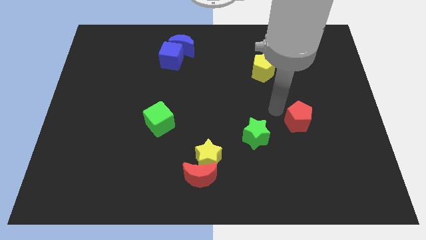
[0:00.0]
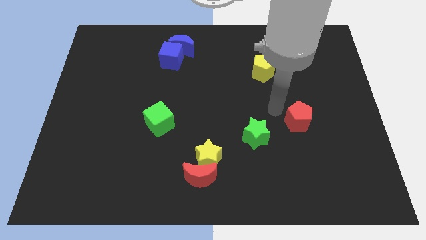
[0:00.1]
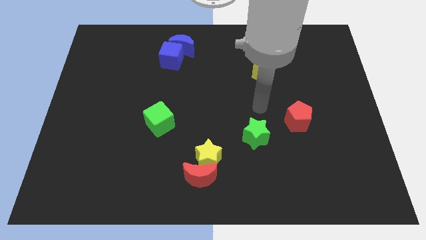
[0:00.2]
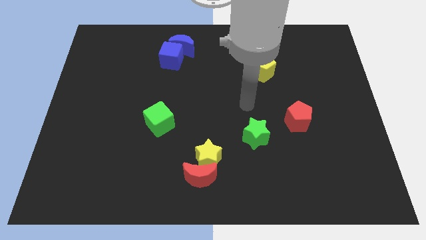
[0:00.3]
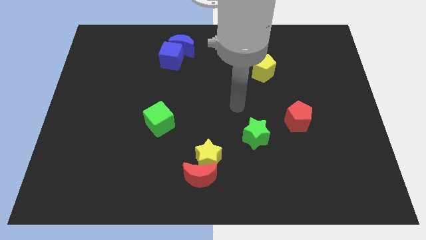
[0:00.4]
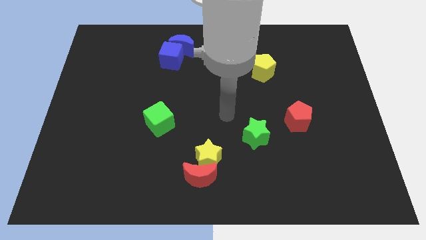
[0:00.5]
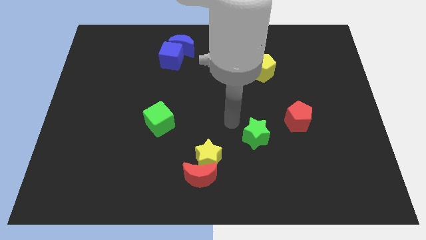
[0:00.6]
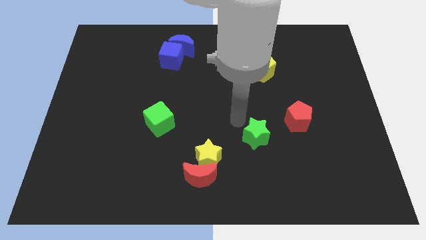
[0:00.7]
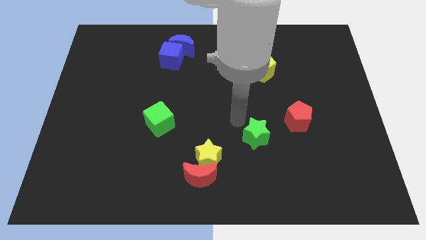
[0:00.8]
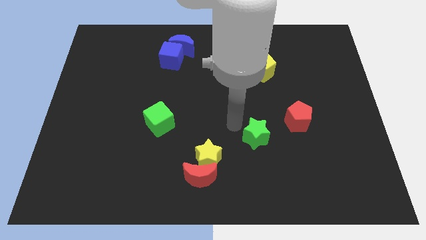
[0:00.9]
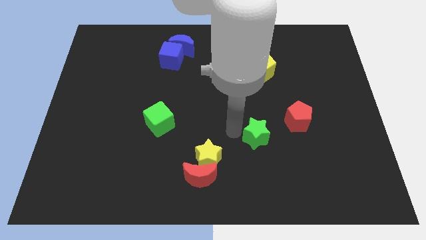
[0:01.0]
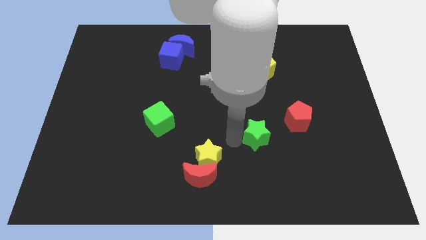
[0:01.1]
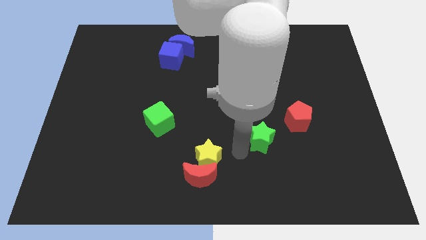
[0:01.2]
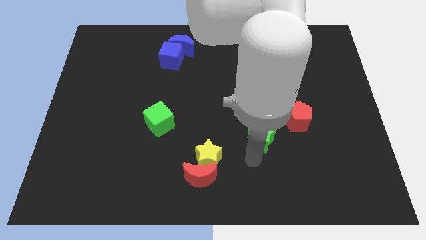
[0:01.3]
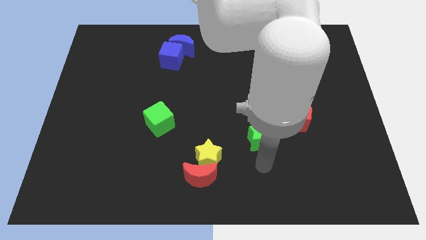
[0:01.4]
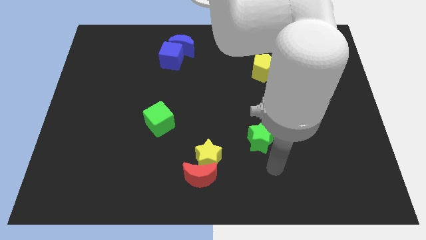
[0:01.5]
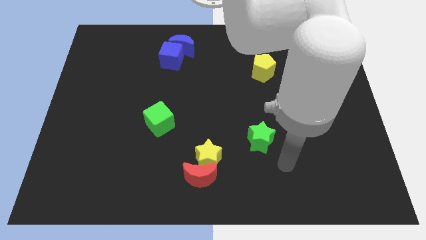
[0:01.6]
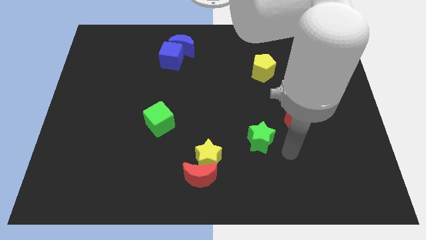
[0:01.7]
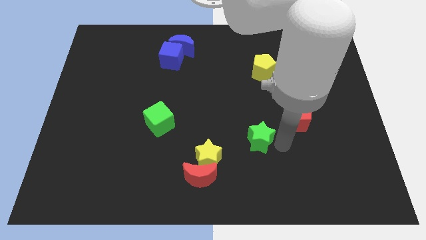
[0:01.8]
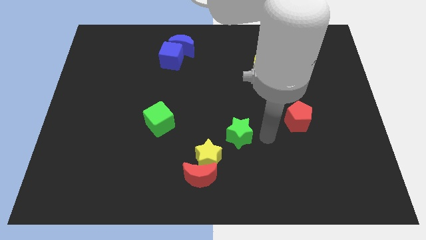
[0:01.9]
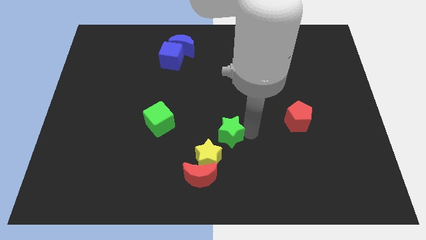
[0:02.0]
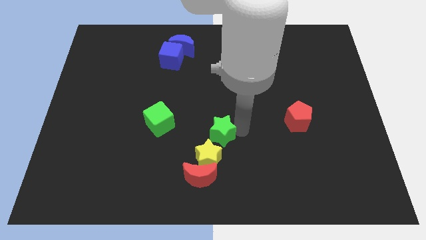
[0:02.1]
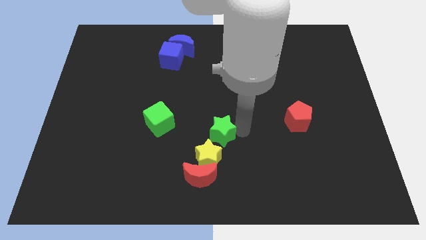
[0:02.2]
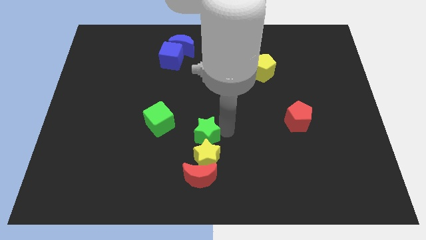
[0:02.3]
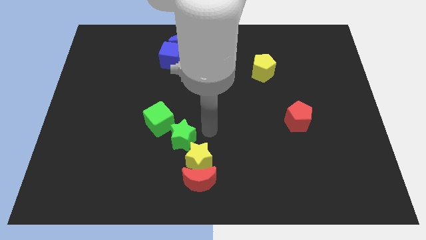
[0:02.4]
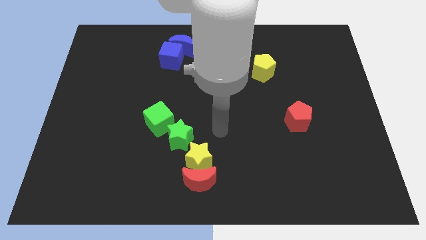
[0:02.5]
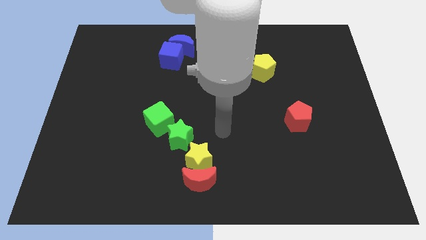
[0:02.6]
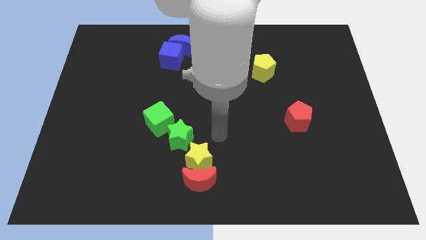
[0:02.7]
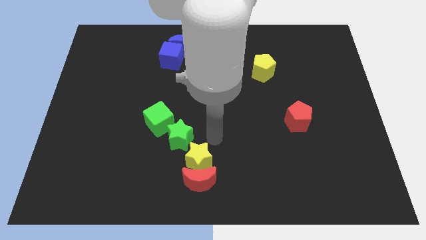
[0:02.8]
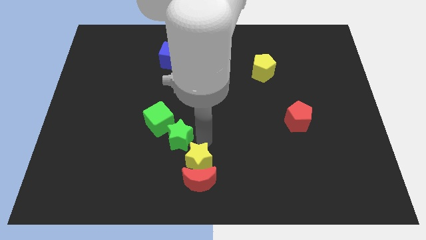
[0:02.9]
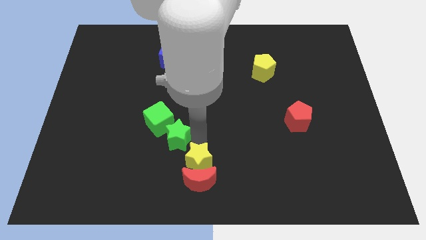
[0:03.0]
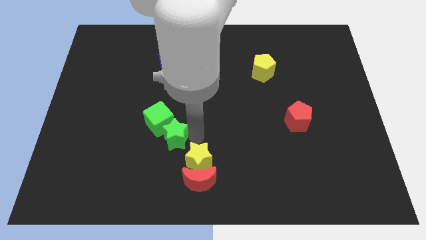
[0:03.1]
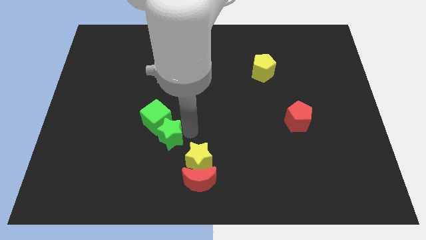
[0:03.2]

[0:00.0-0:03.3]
move the green star into the green cube

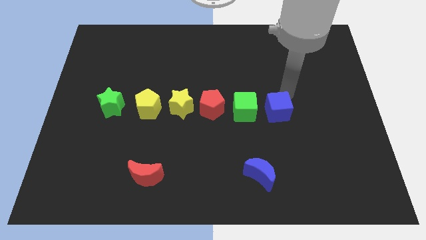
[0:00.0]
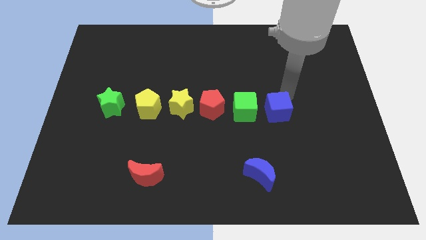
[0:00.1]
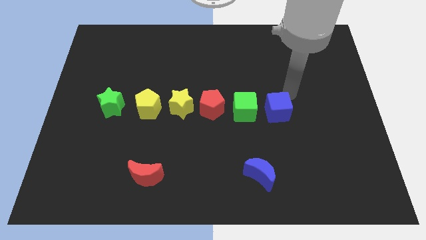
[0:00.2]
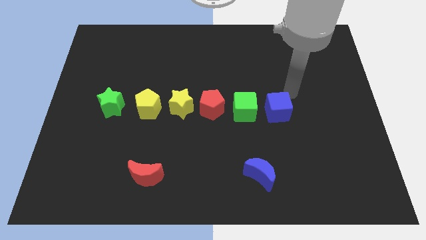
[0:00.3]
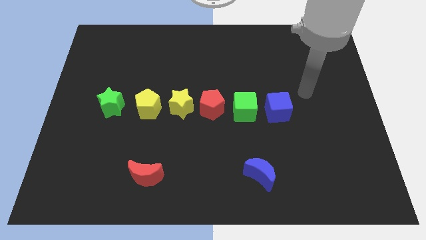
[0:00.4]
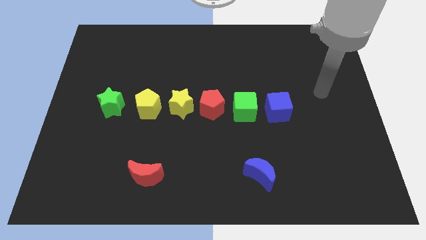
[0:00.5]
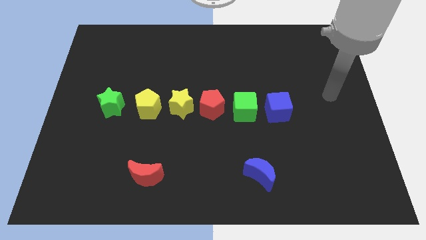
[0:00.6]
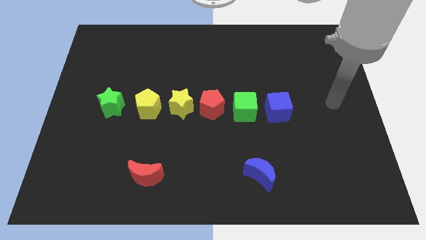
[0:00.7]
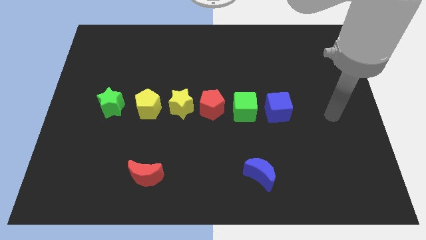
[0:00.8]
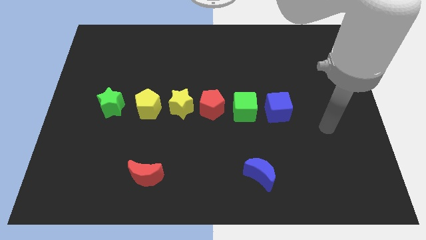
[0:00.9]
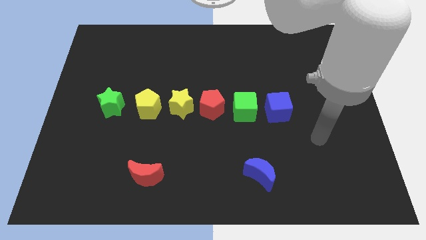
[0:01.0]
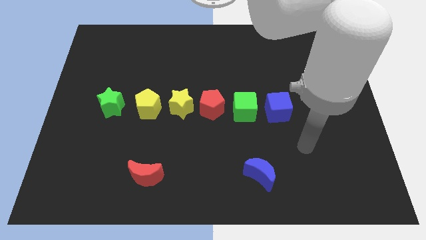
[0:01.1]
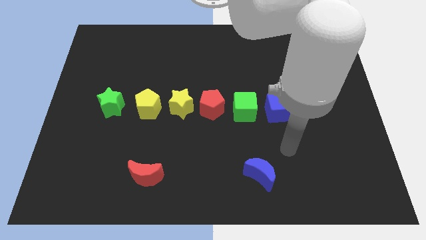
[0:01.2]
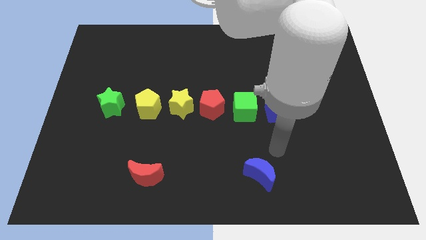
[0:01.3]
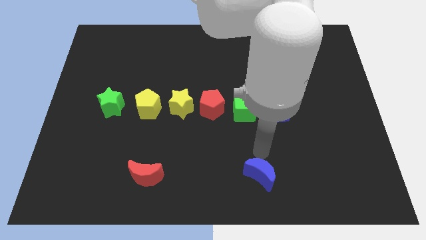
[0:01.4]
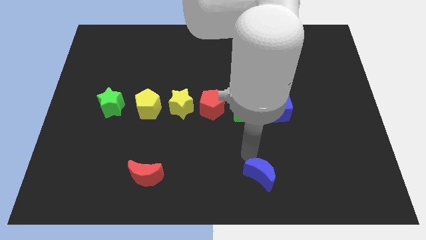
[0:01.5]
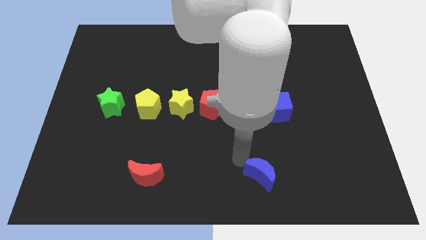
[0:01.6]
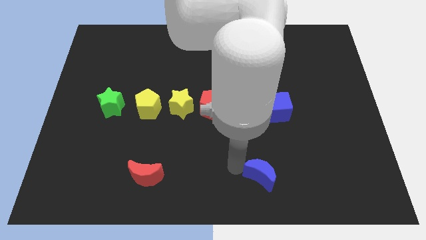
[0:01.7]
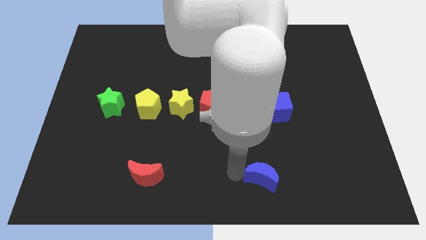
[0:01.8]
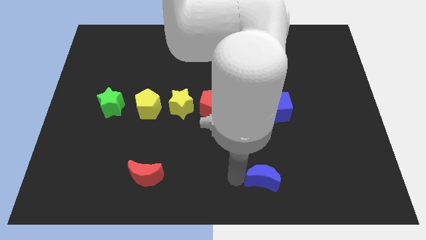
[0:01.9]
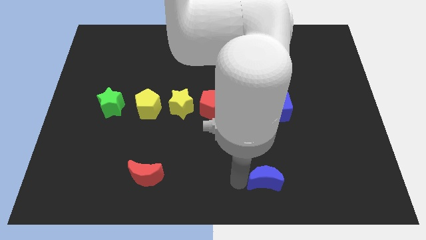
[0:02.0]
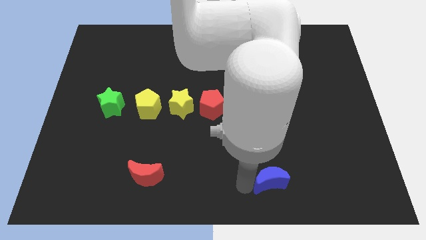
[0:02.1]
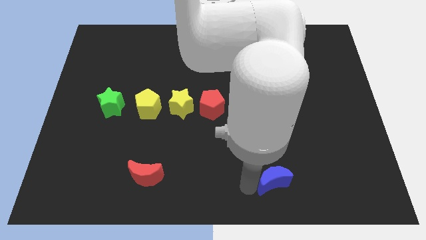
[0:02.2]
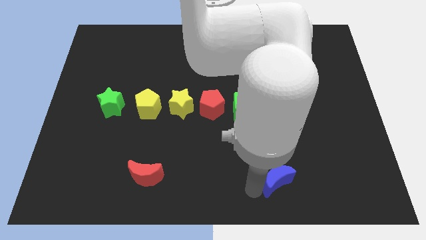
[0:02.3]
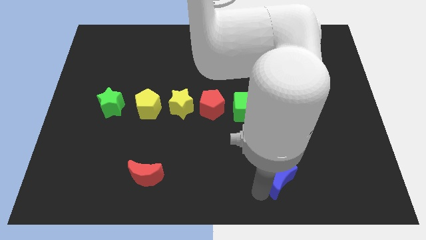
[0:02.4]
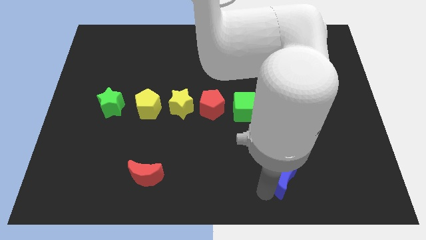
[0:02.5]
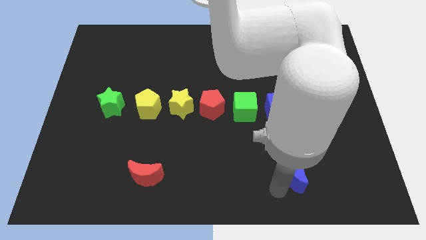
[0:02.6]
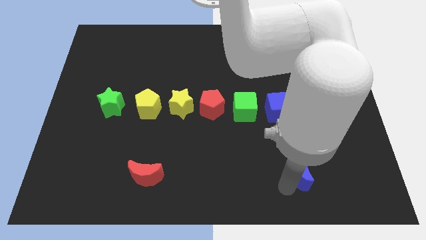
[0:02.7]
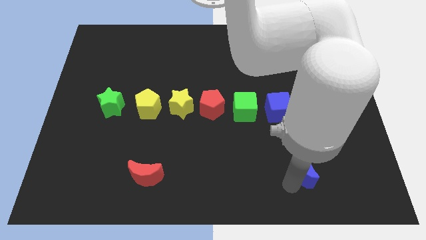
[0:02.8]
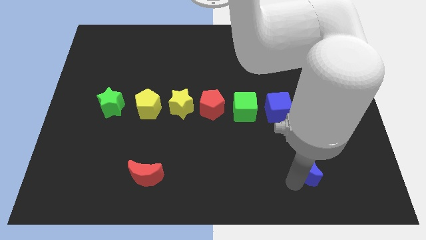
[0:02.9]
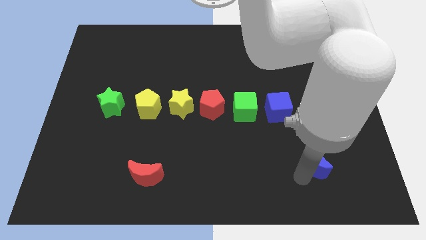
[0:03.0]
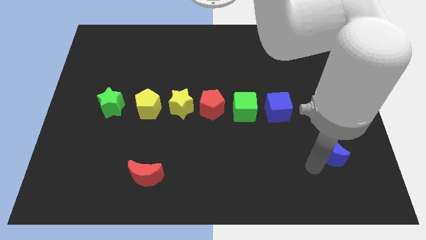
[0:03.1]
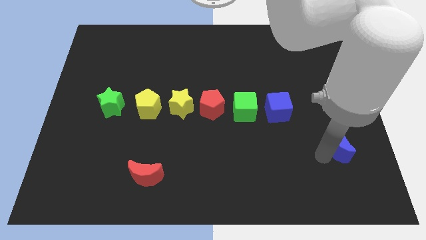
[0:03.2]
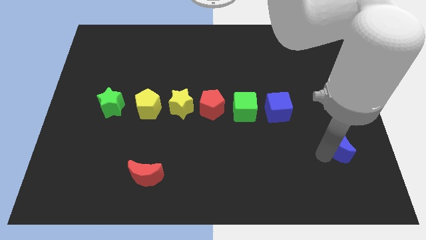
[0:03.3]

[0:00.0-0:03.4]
push the blue crescent towards the top of the board

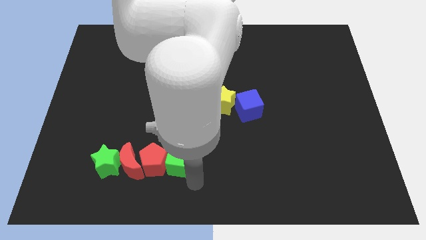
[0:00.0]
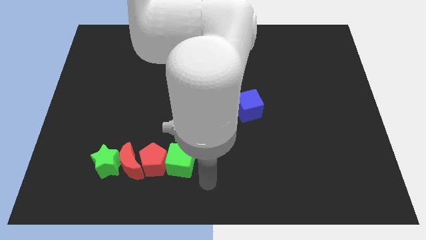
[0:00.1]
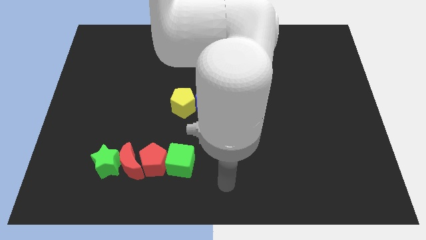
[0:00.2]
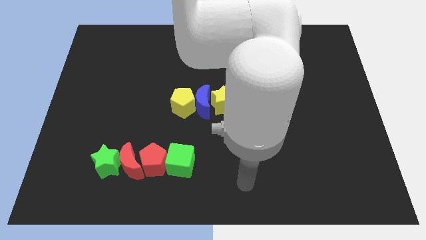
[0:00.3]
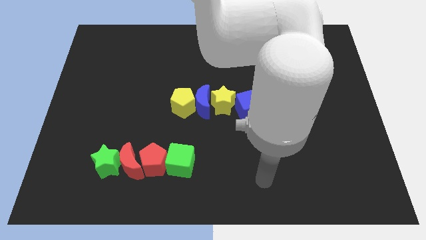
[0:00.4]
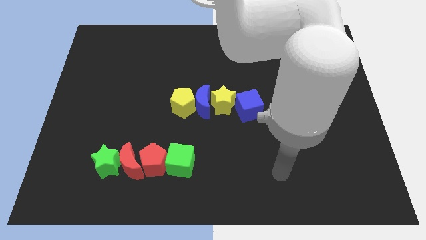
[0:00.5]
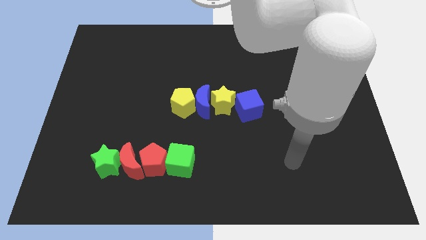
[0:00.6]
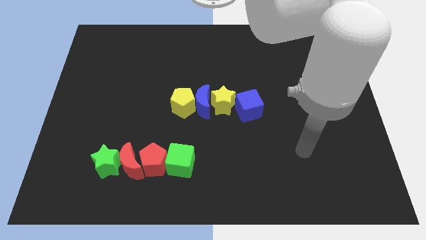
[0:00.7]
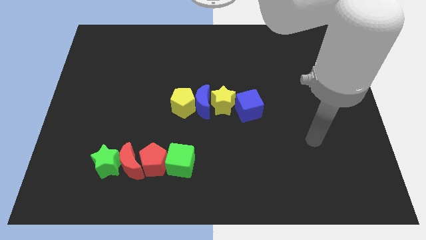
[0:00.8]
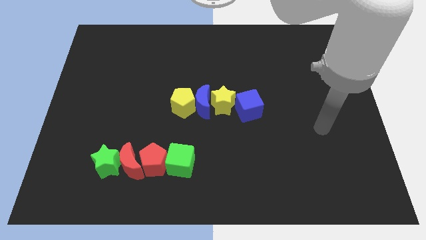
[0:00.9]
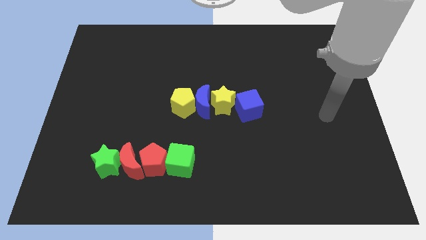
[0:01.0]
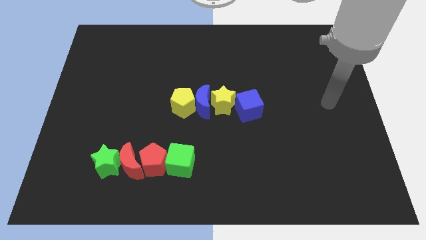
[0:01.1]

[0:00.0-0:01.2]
move your hand to the top right corner

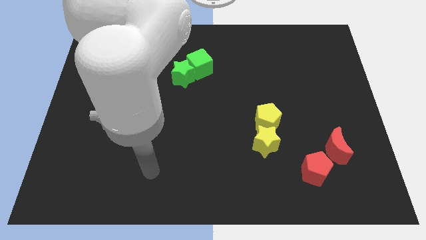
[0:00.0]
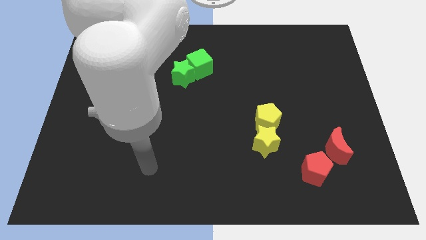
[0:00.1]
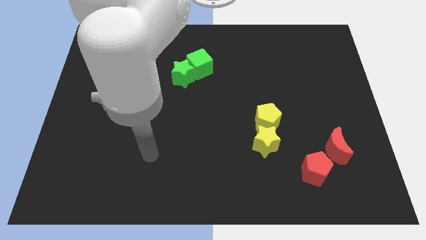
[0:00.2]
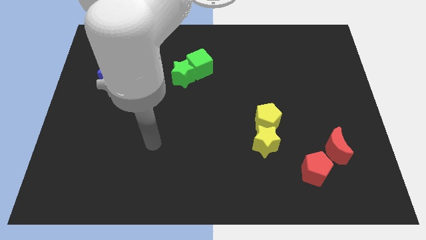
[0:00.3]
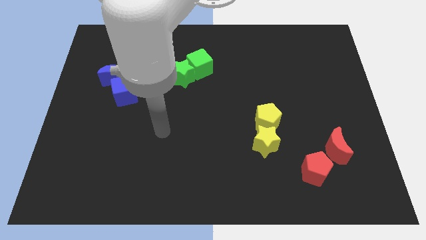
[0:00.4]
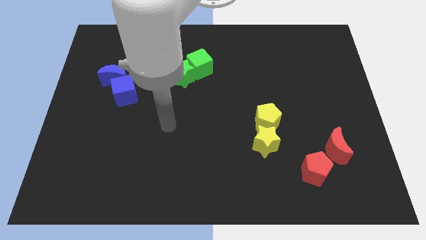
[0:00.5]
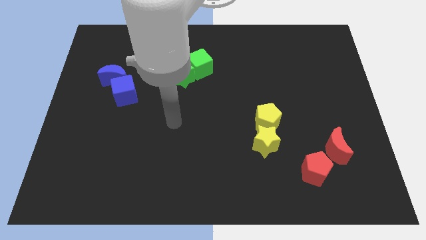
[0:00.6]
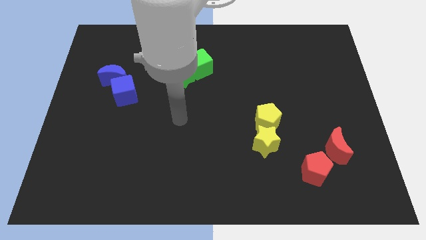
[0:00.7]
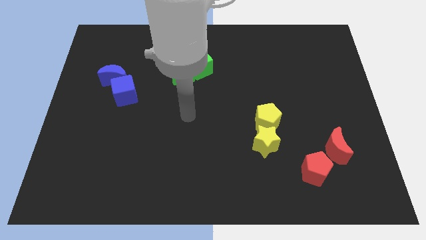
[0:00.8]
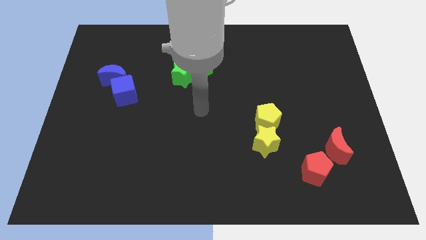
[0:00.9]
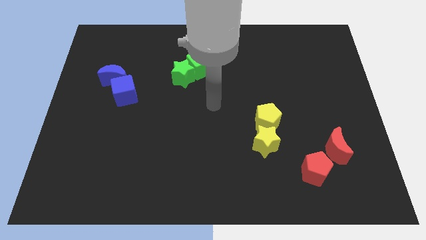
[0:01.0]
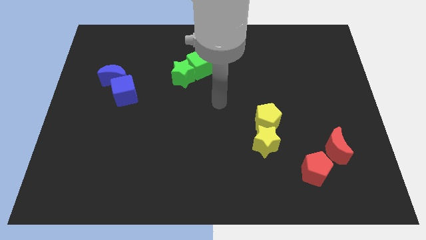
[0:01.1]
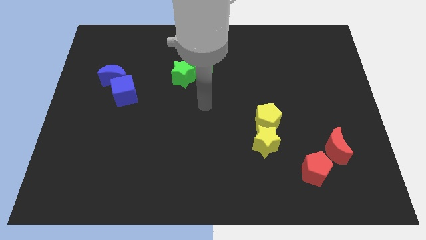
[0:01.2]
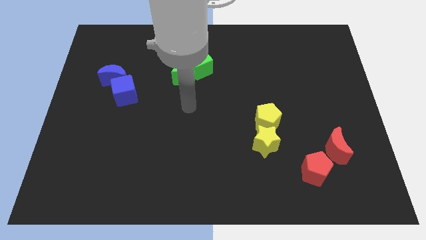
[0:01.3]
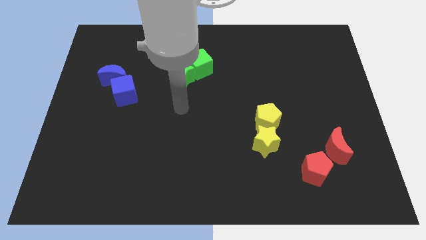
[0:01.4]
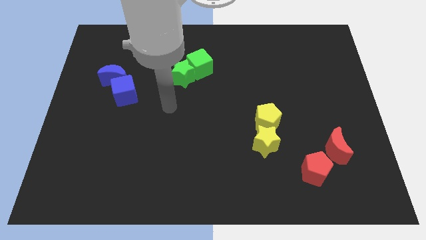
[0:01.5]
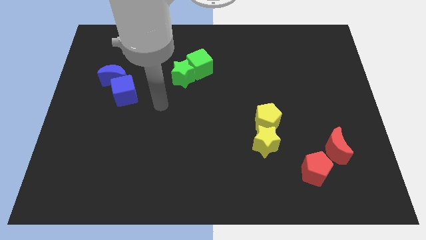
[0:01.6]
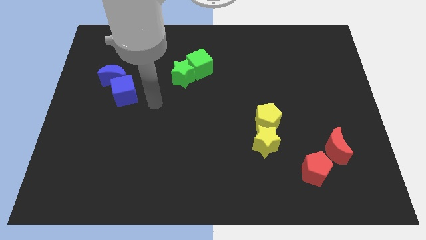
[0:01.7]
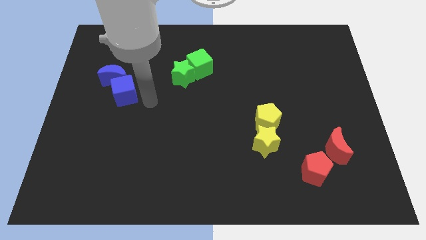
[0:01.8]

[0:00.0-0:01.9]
point your hand at the bottom right side of the blue cube
